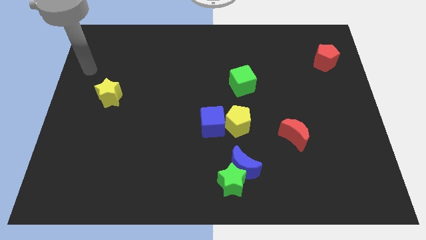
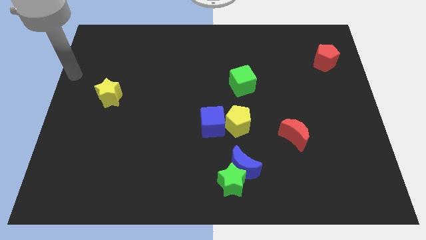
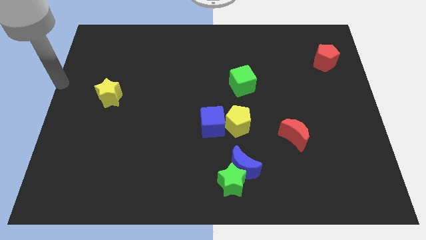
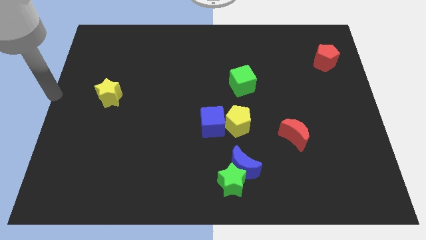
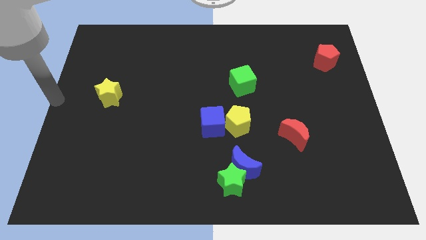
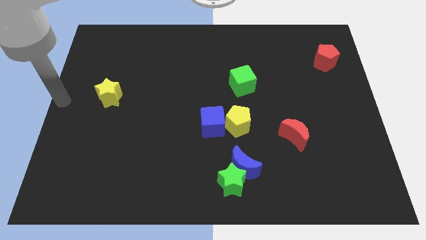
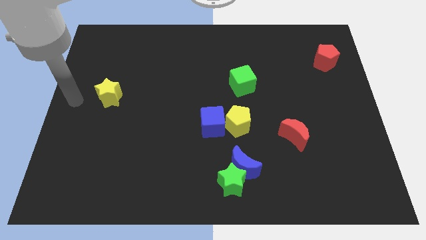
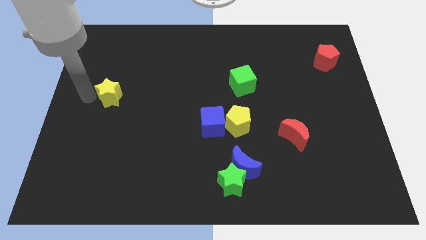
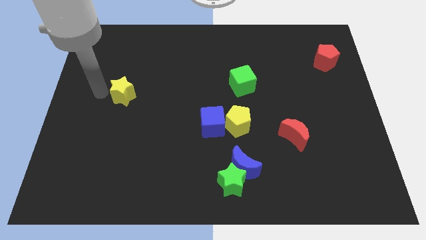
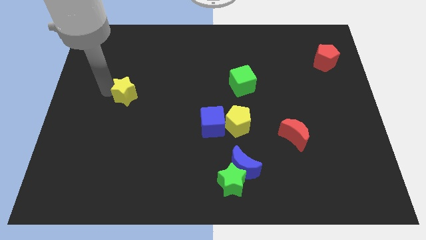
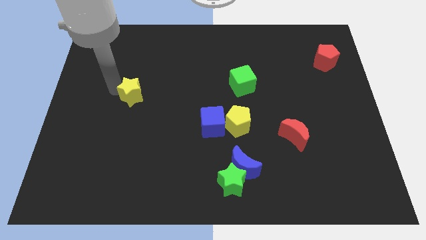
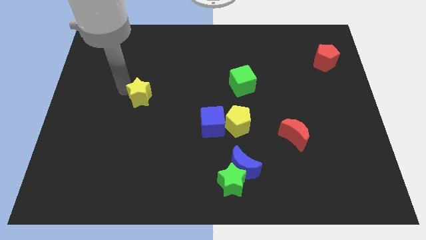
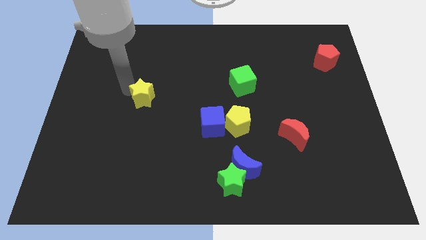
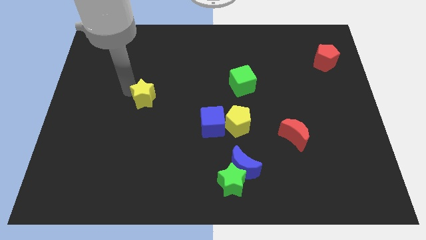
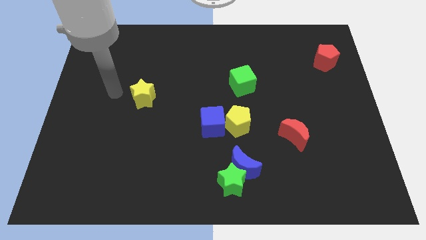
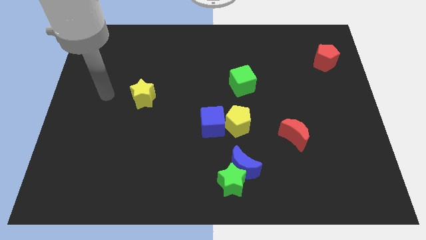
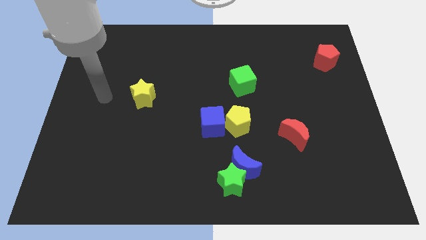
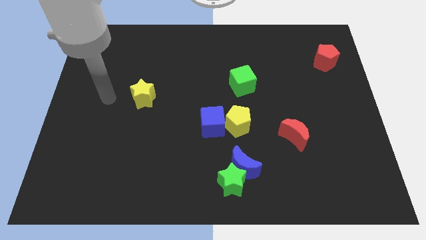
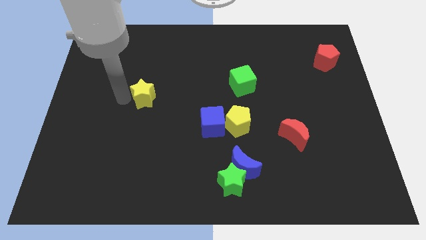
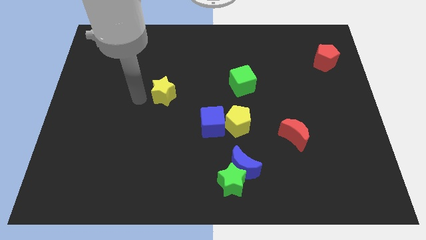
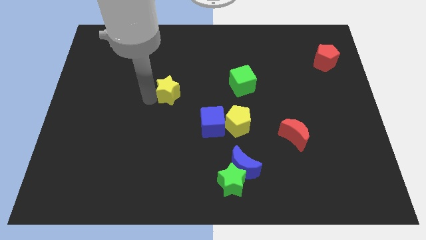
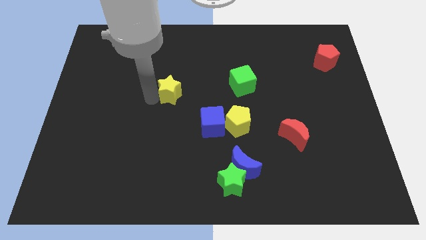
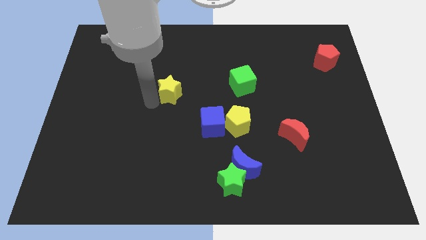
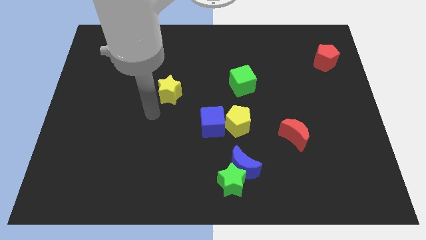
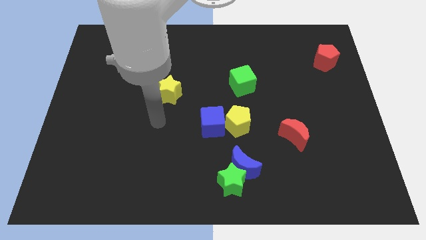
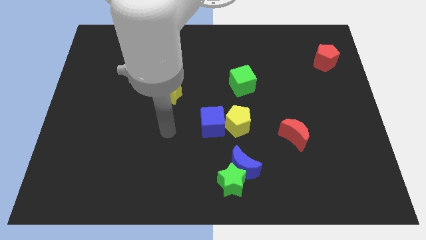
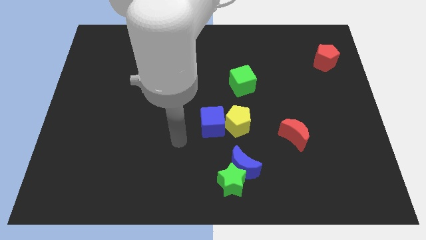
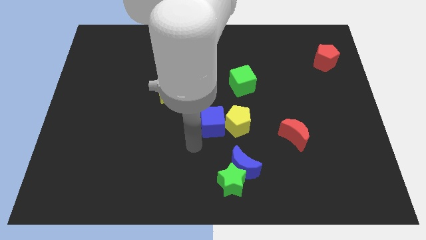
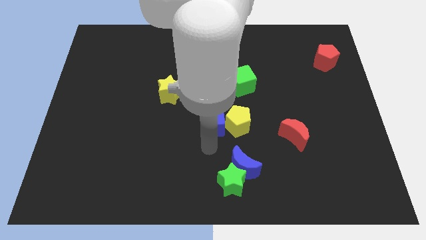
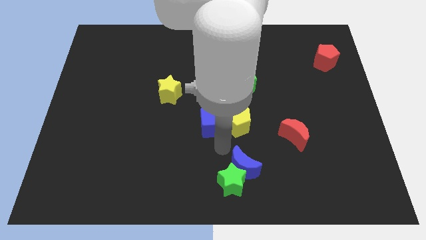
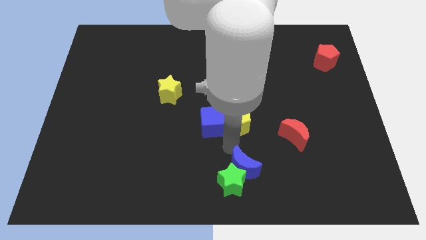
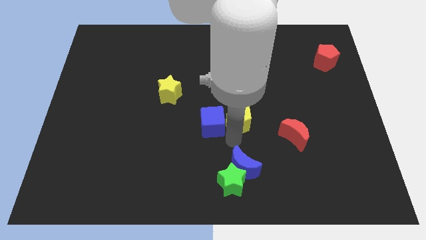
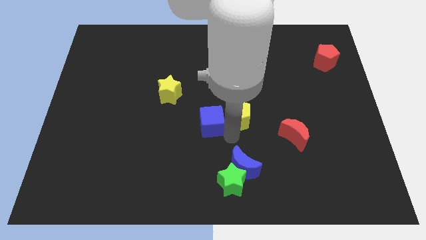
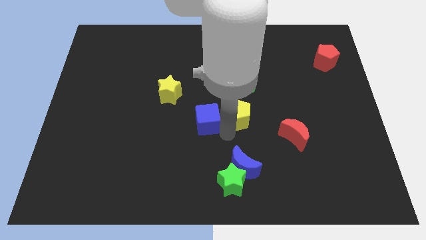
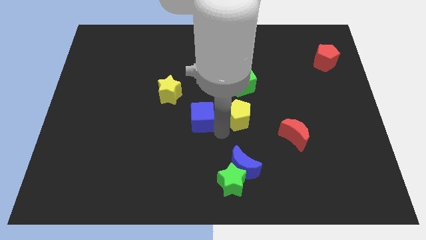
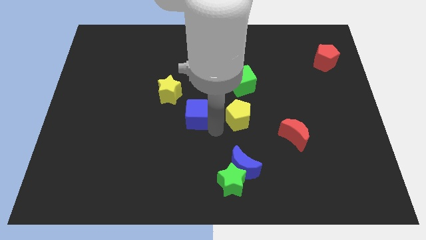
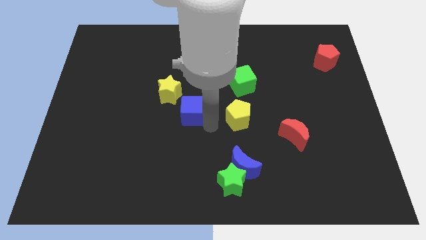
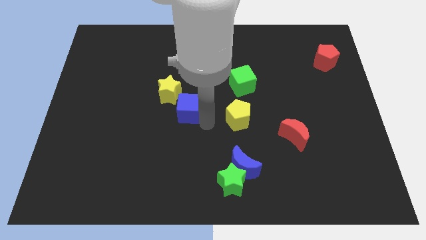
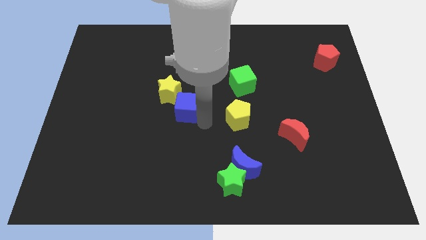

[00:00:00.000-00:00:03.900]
separate the blue cube and yellow pentagon

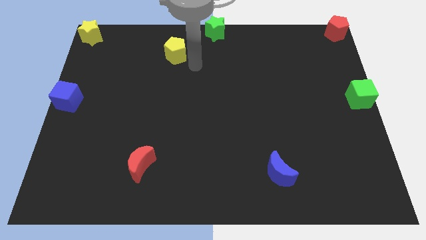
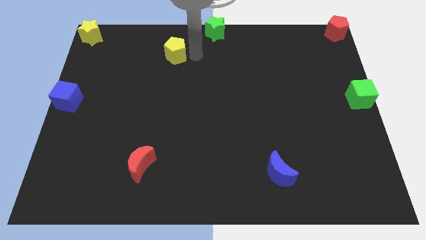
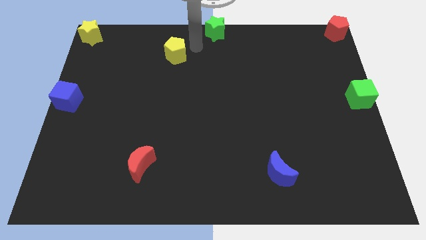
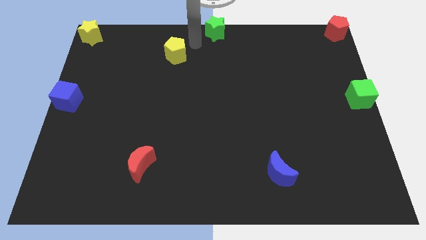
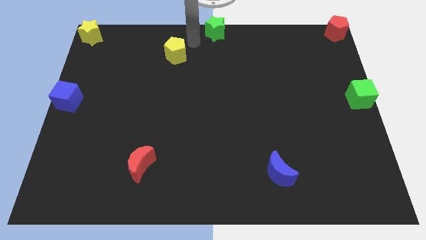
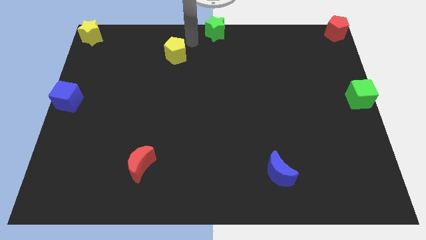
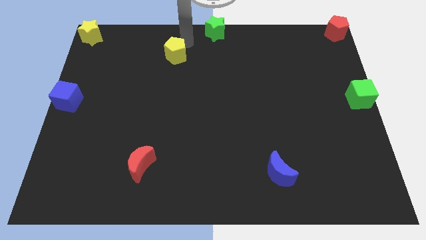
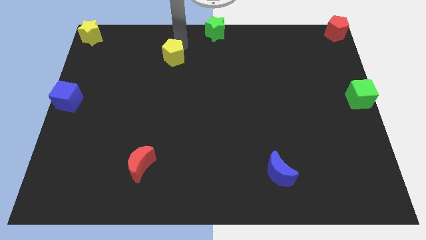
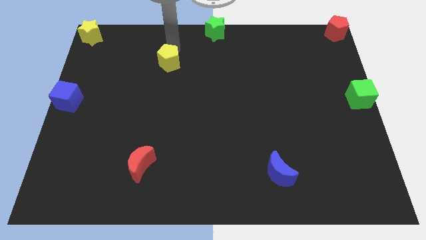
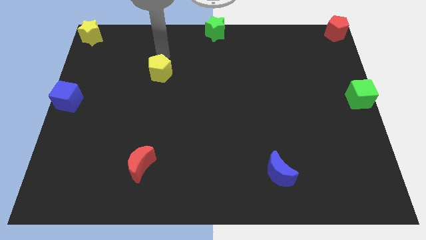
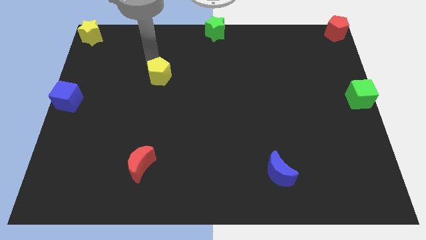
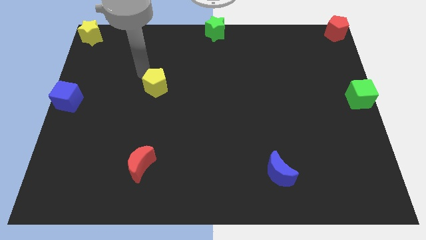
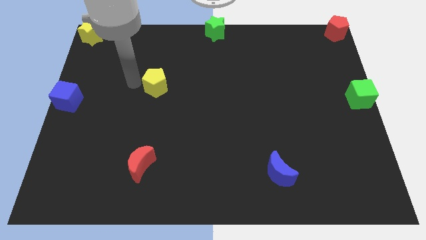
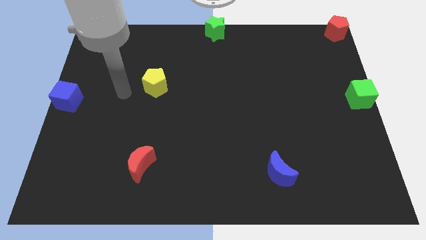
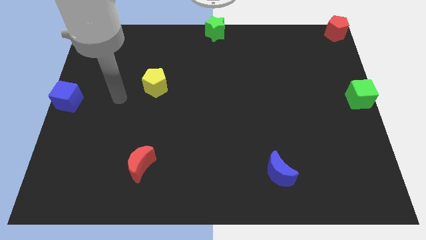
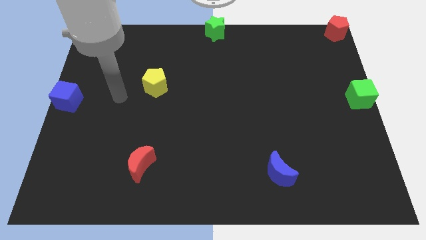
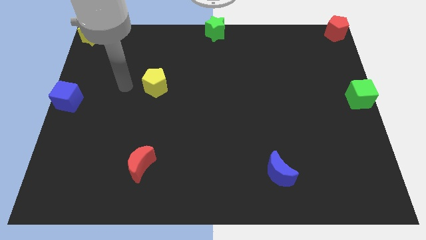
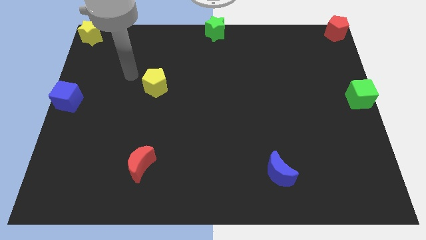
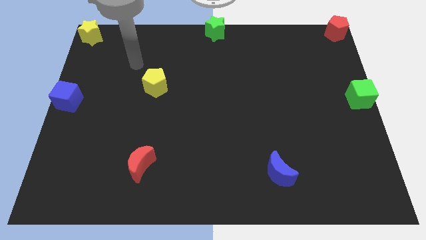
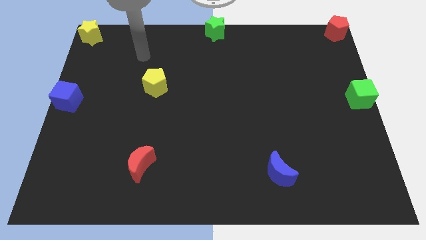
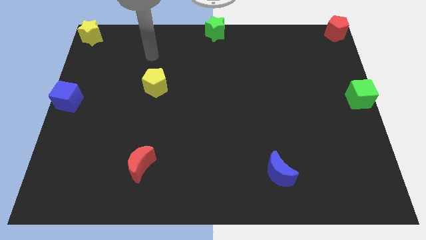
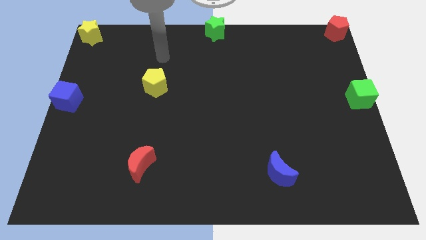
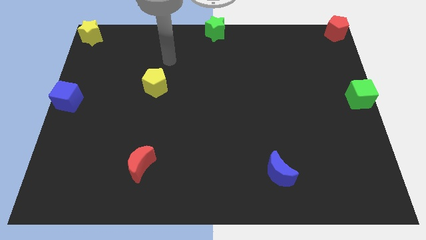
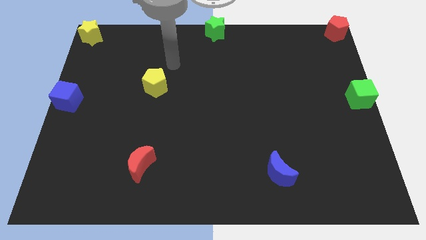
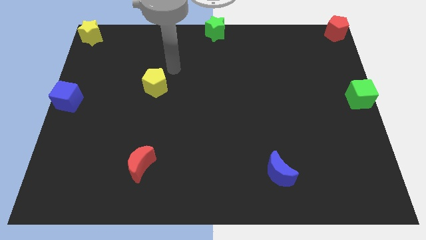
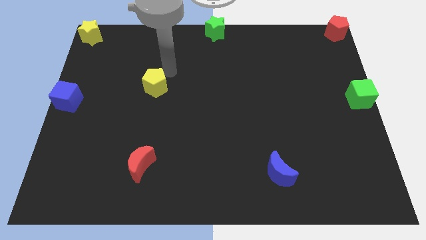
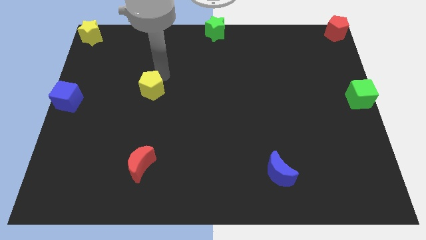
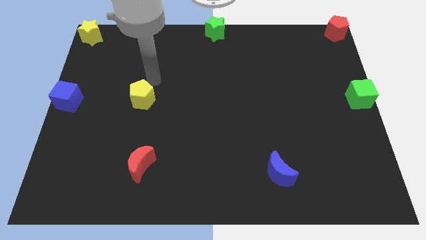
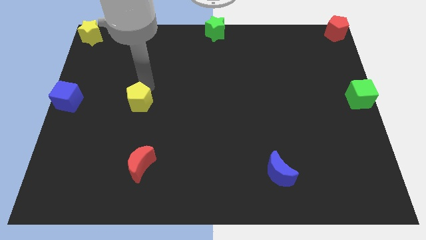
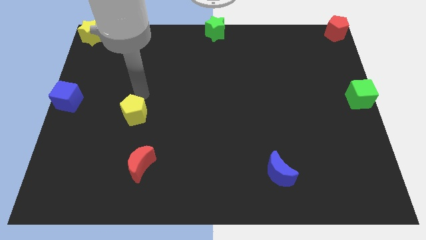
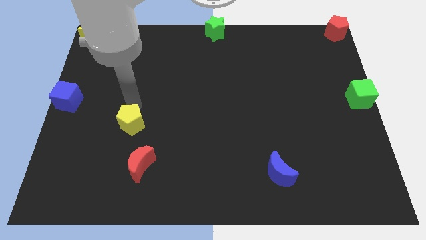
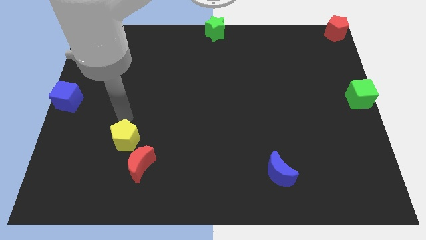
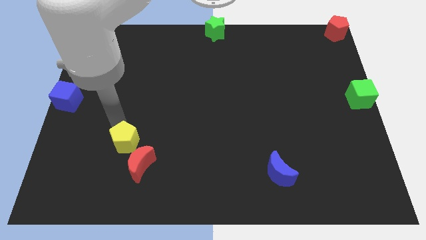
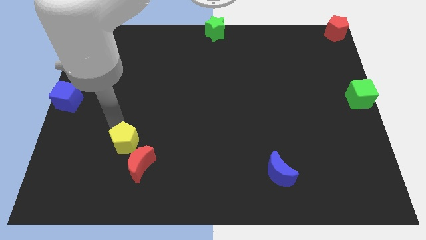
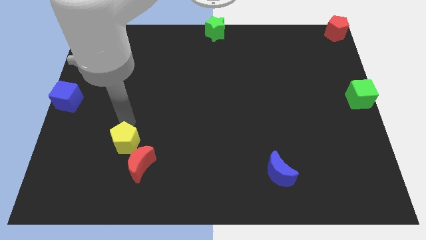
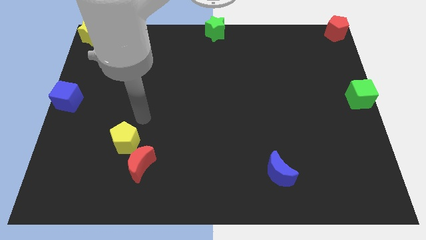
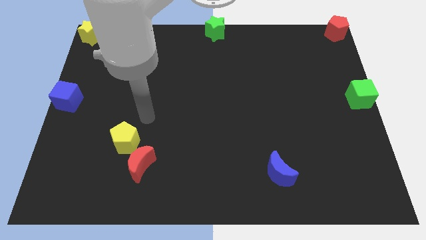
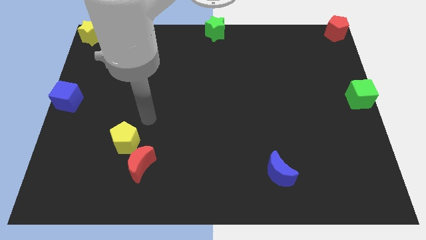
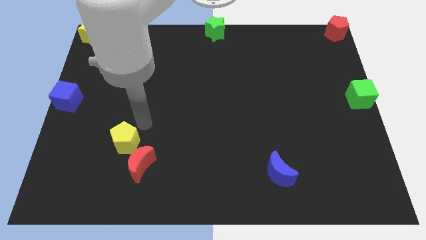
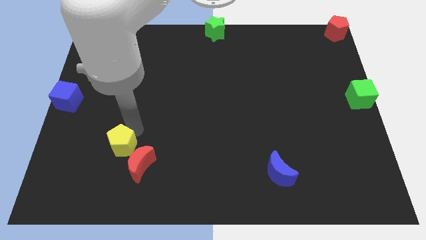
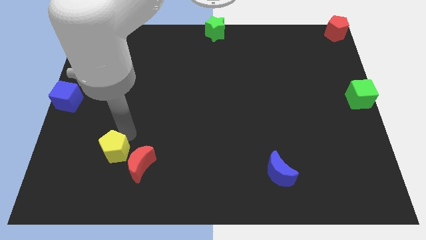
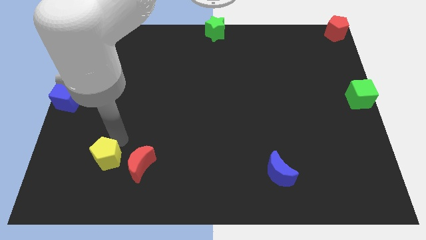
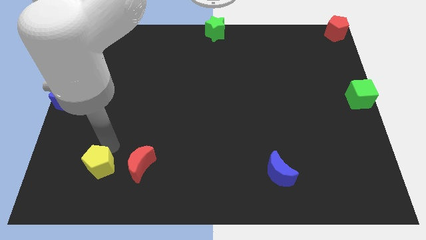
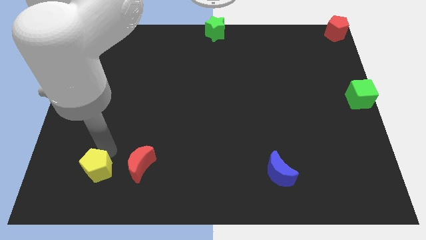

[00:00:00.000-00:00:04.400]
place the yellow pentagon to the left side of the red crescent

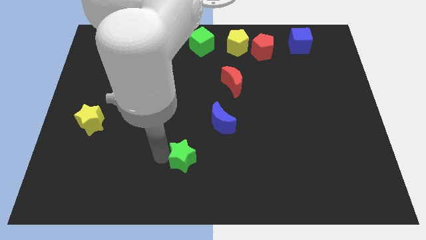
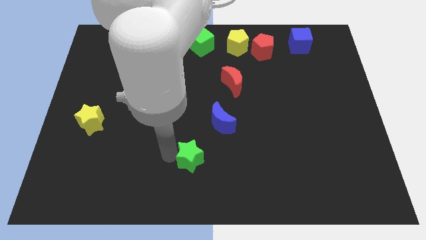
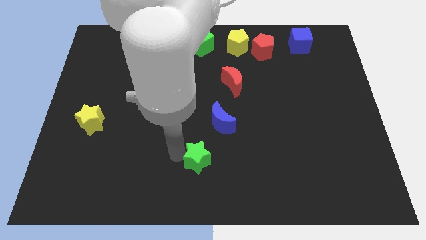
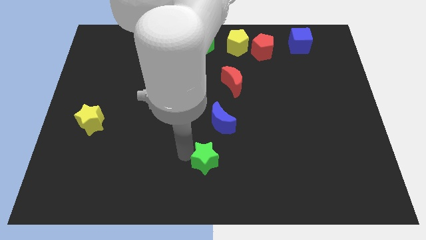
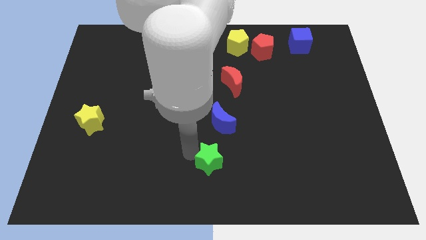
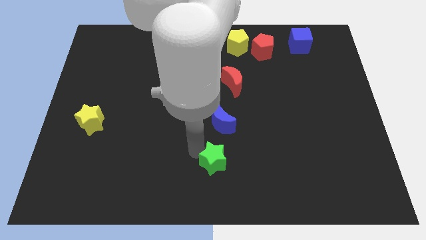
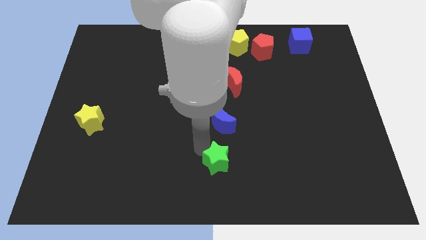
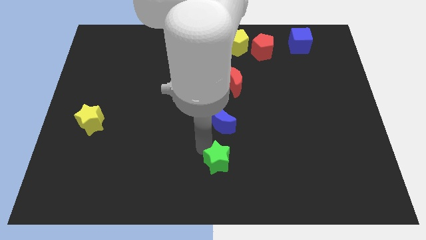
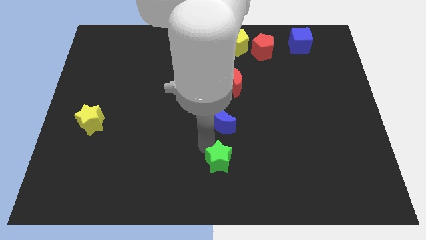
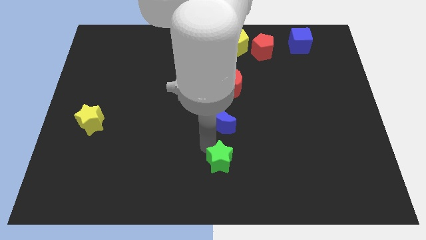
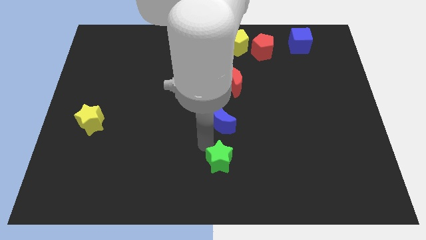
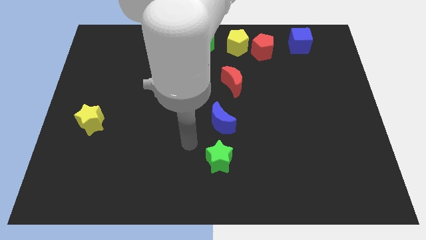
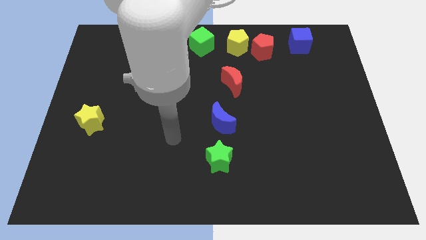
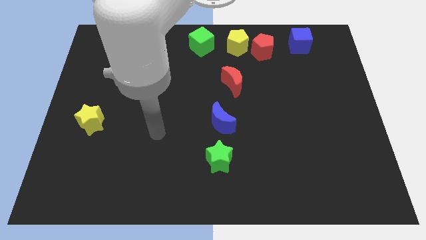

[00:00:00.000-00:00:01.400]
place the green star below the blue crescent
